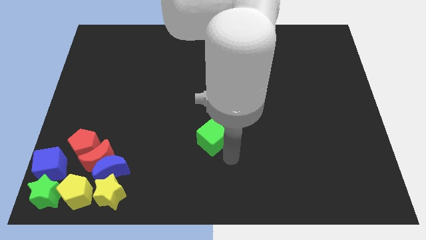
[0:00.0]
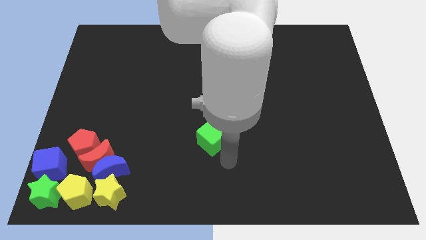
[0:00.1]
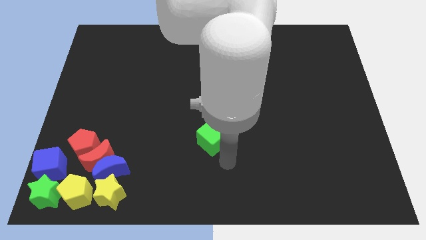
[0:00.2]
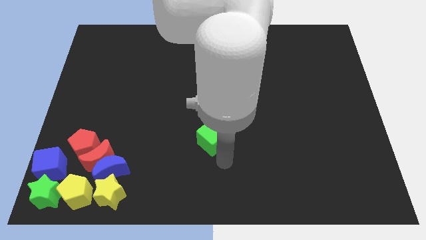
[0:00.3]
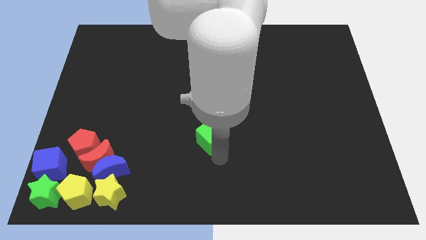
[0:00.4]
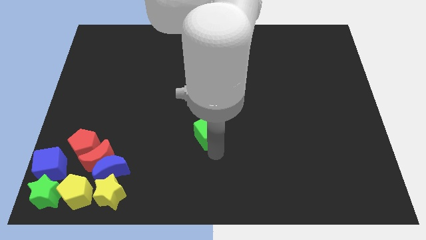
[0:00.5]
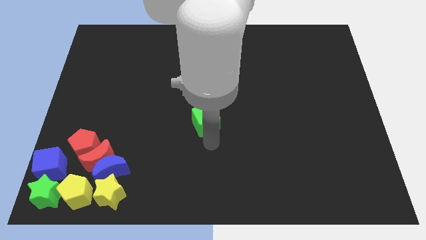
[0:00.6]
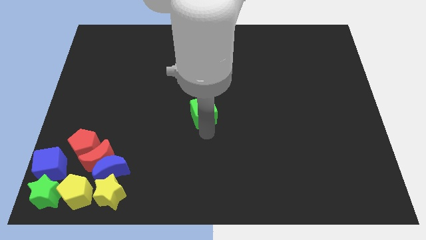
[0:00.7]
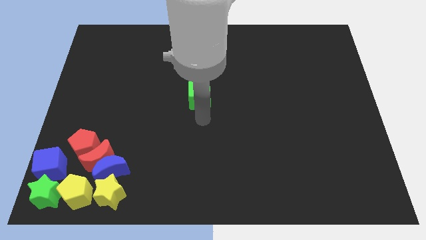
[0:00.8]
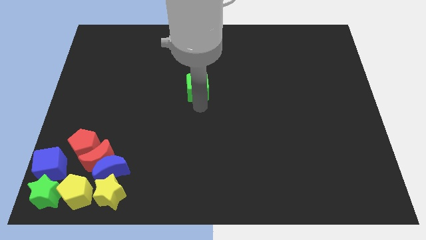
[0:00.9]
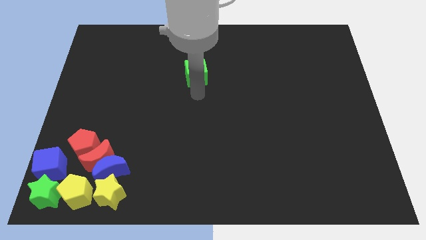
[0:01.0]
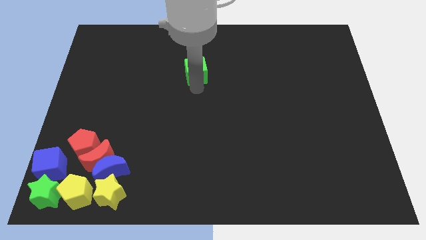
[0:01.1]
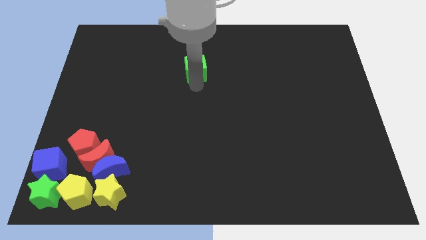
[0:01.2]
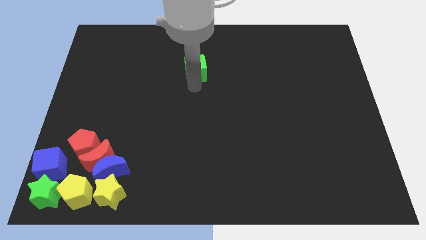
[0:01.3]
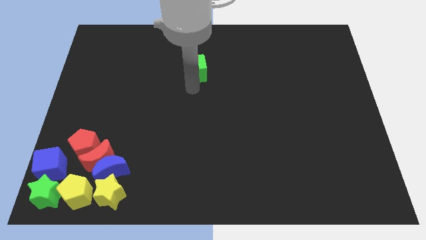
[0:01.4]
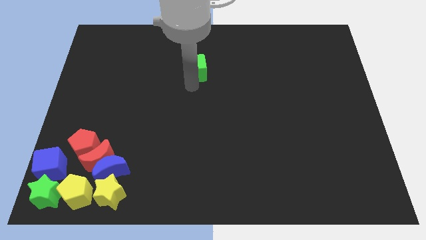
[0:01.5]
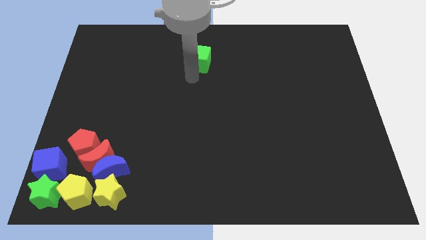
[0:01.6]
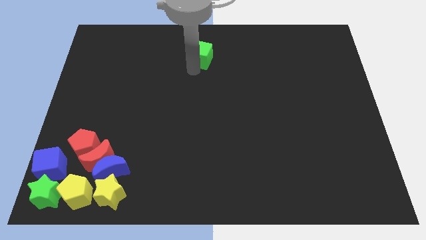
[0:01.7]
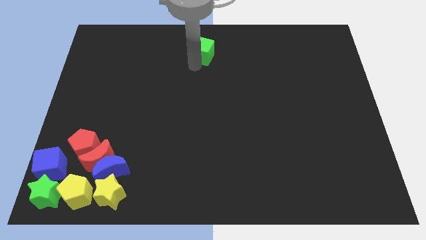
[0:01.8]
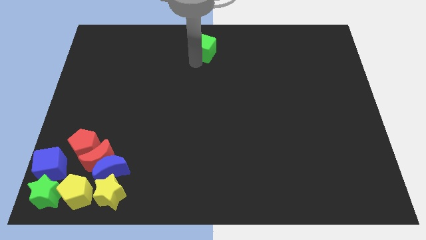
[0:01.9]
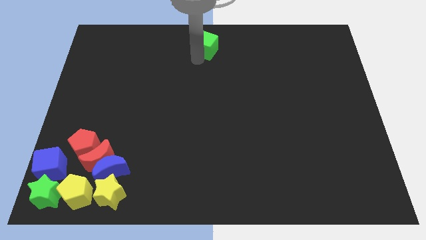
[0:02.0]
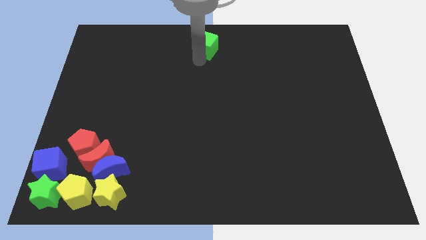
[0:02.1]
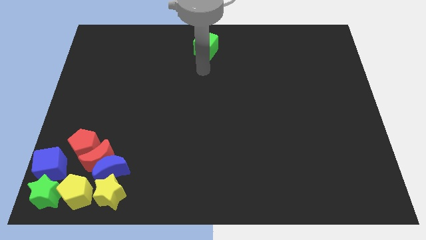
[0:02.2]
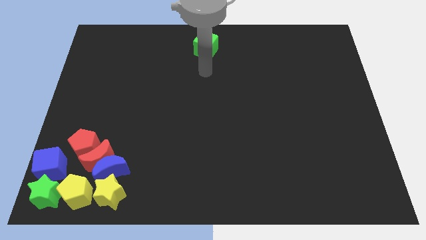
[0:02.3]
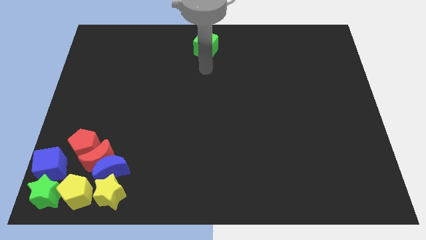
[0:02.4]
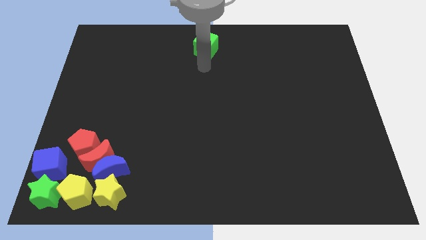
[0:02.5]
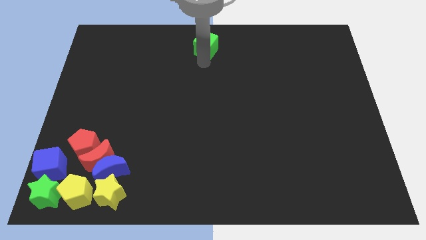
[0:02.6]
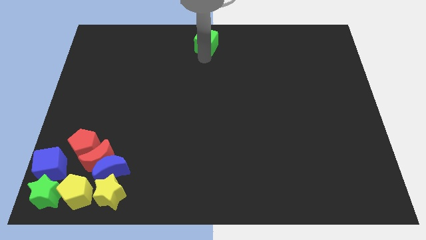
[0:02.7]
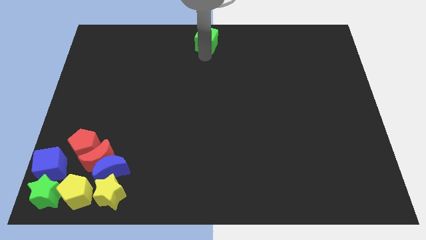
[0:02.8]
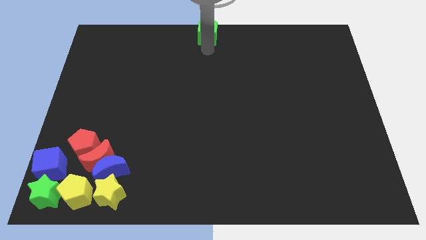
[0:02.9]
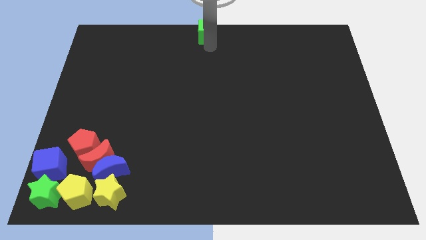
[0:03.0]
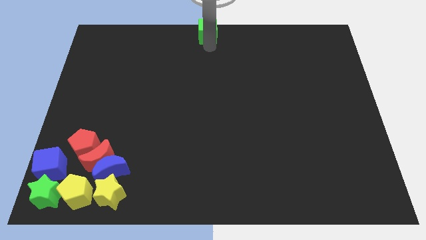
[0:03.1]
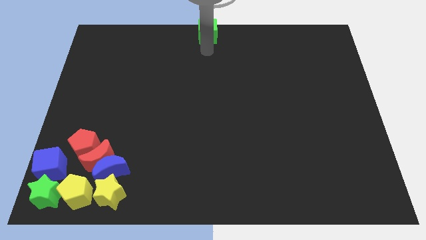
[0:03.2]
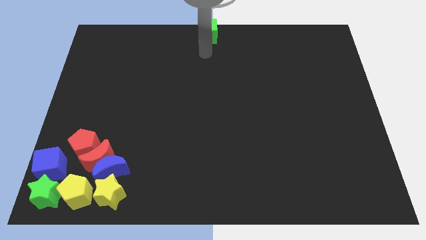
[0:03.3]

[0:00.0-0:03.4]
place the green cube towards the middle end of the board

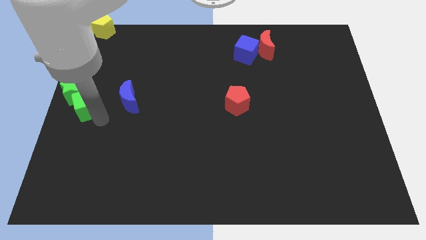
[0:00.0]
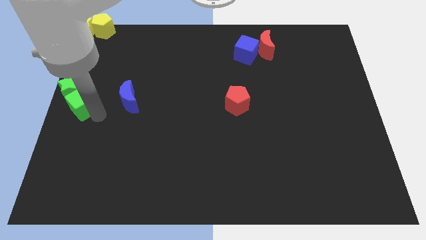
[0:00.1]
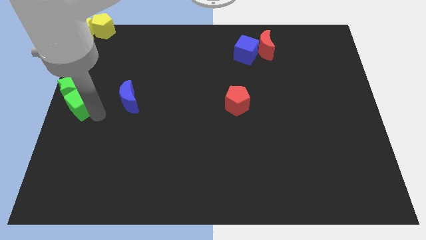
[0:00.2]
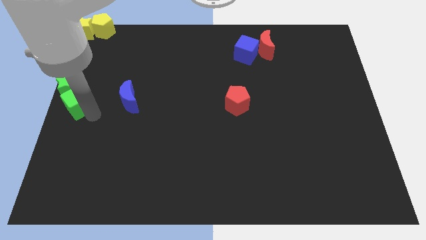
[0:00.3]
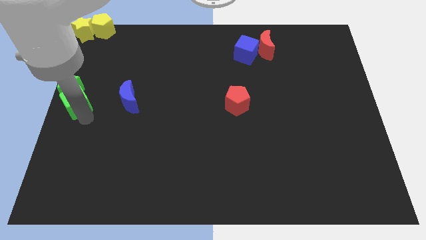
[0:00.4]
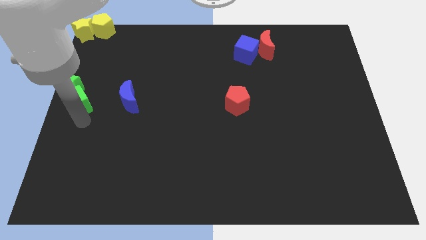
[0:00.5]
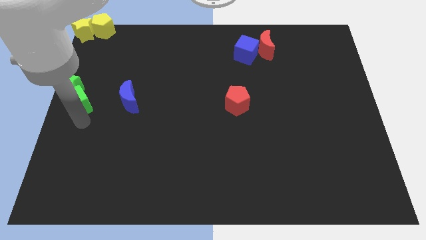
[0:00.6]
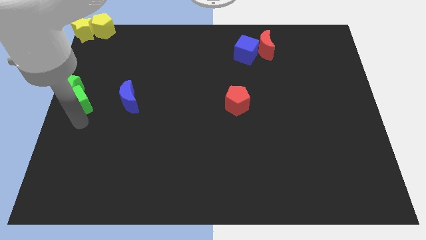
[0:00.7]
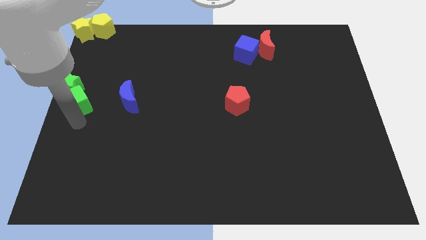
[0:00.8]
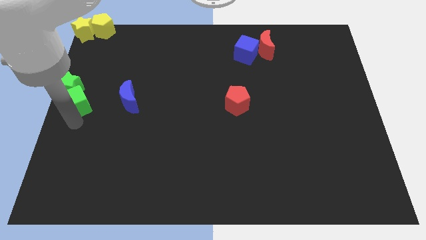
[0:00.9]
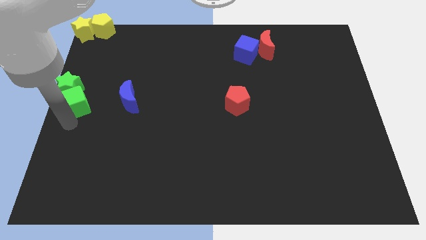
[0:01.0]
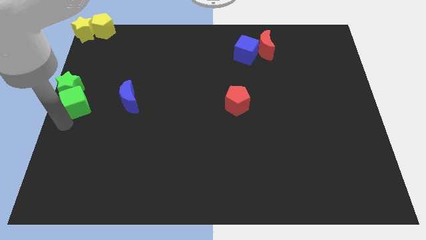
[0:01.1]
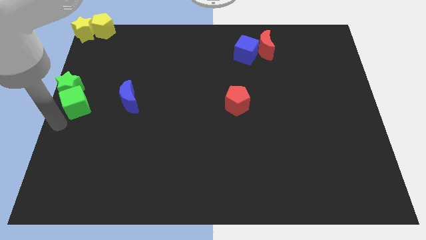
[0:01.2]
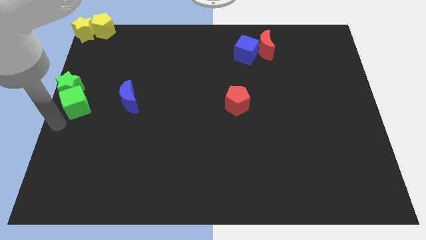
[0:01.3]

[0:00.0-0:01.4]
place the green blocks at the center left side of the board

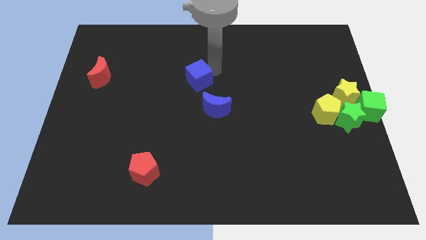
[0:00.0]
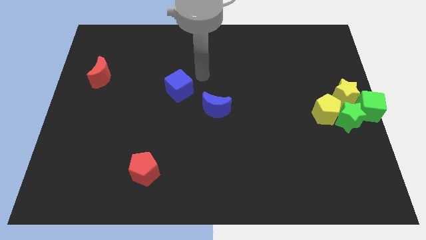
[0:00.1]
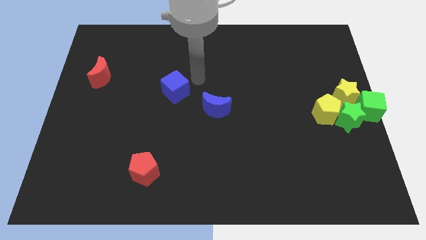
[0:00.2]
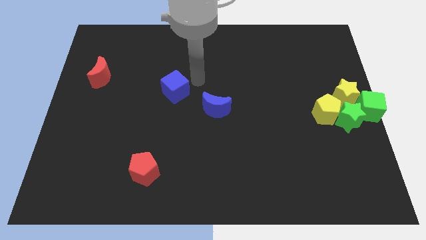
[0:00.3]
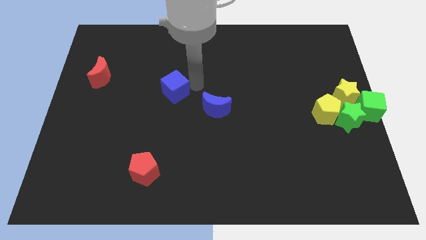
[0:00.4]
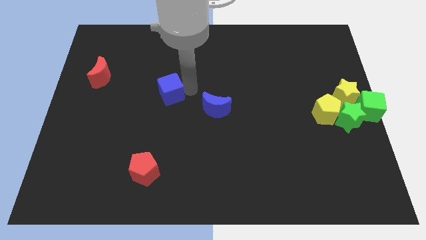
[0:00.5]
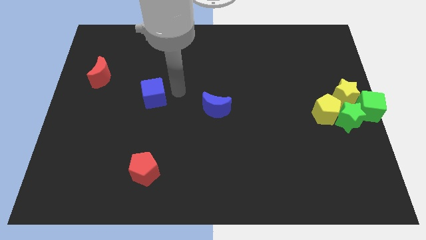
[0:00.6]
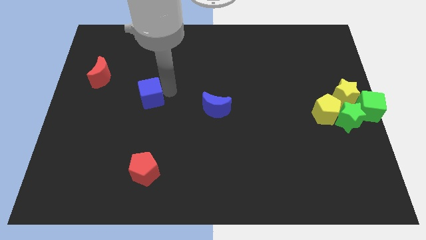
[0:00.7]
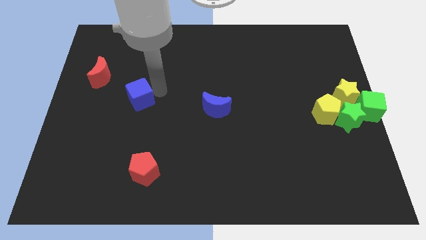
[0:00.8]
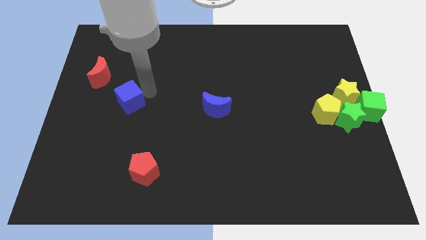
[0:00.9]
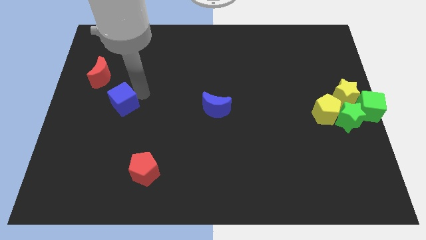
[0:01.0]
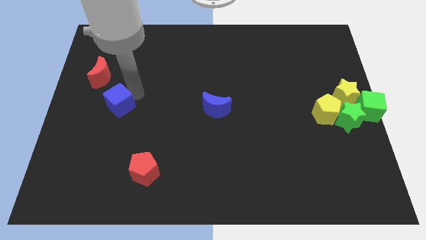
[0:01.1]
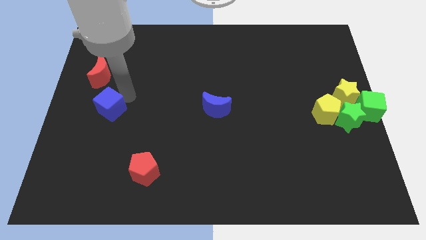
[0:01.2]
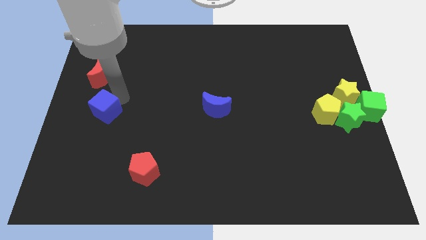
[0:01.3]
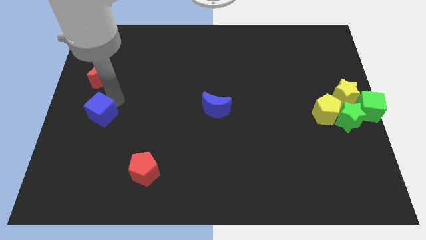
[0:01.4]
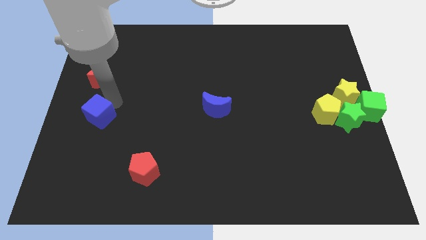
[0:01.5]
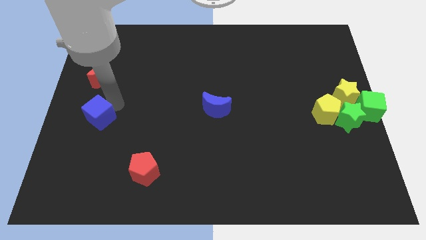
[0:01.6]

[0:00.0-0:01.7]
move the blue cube to the bottom side of the red moon

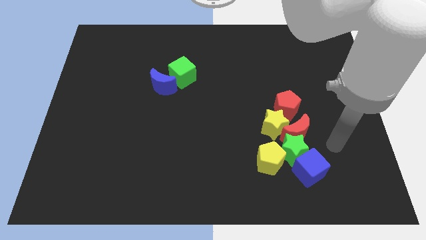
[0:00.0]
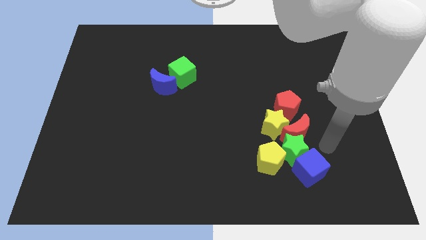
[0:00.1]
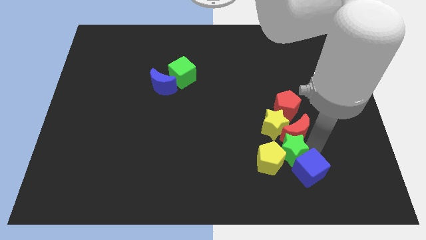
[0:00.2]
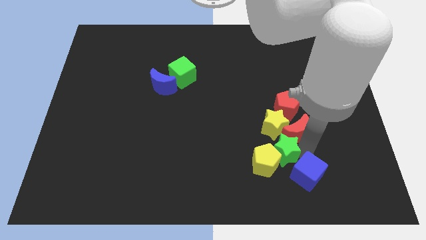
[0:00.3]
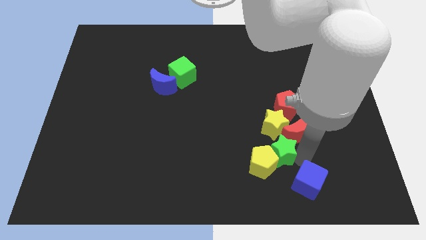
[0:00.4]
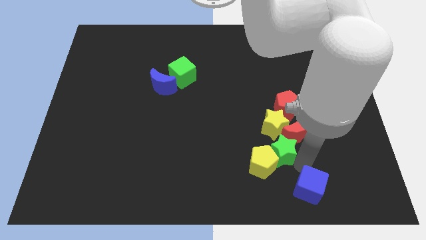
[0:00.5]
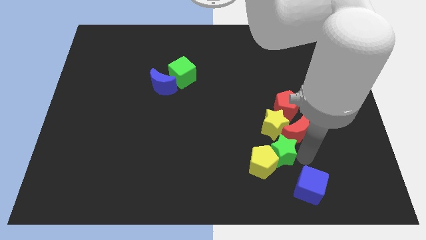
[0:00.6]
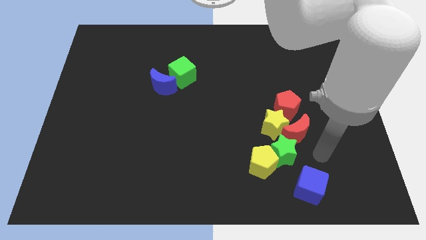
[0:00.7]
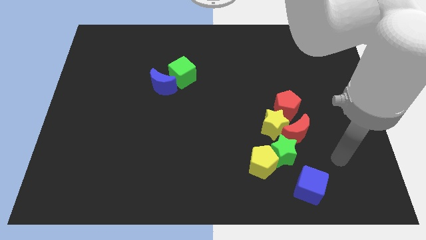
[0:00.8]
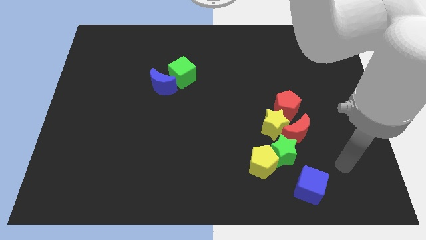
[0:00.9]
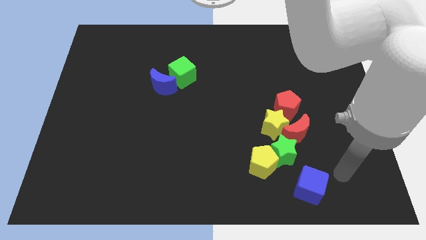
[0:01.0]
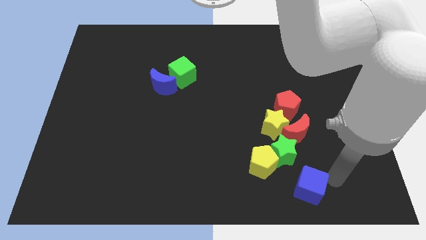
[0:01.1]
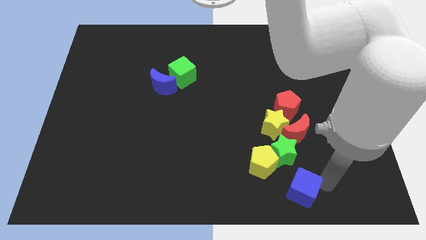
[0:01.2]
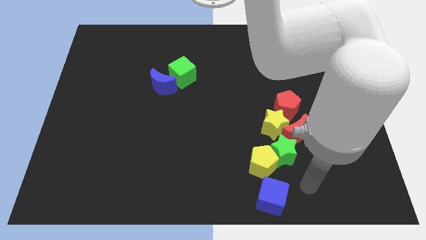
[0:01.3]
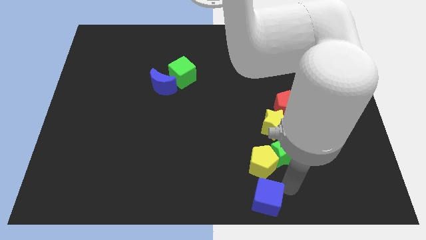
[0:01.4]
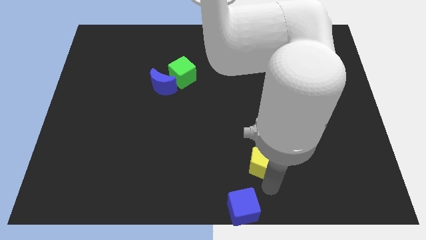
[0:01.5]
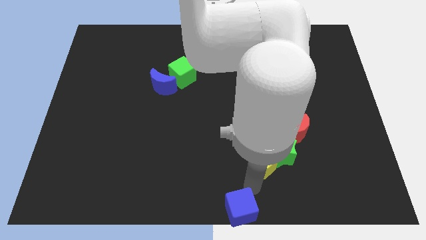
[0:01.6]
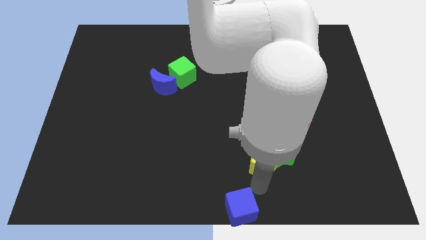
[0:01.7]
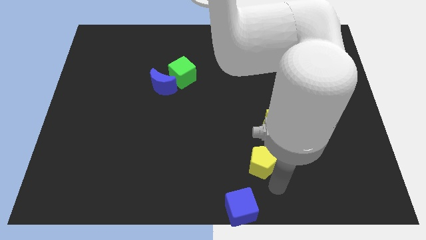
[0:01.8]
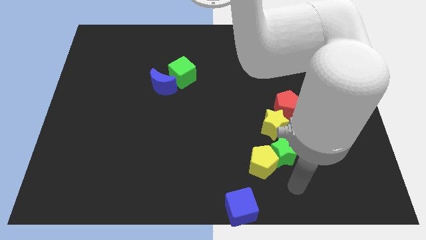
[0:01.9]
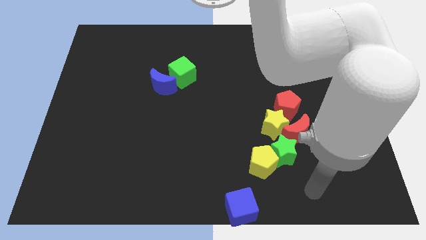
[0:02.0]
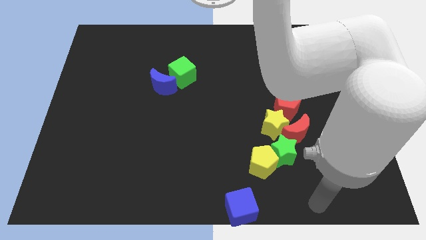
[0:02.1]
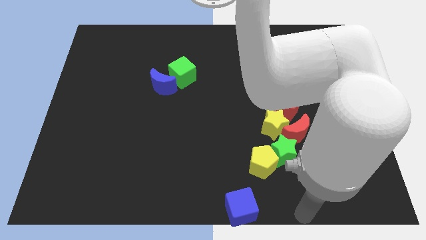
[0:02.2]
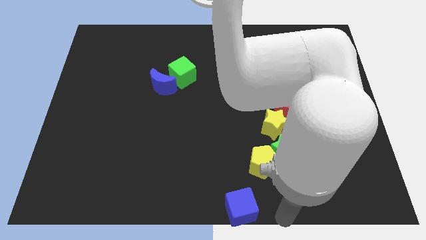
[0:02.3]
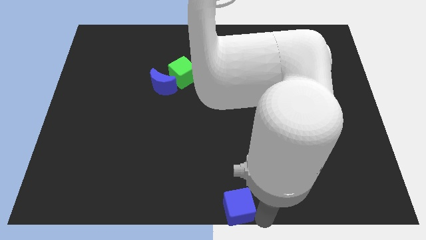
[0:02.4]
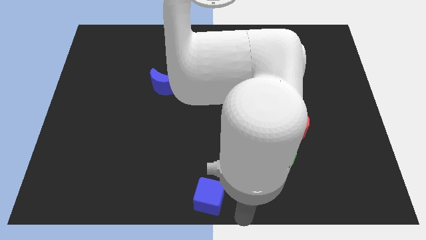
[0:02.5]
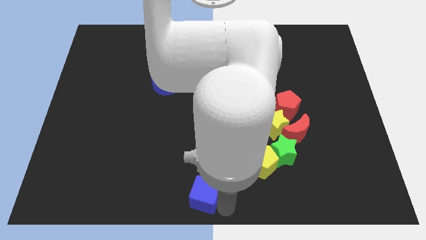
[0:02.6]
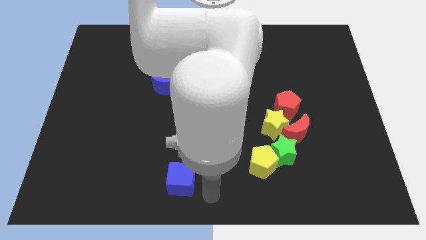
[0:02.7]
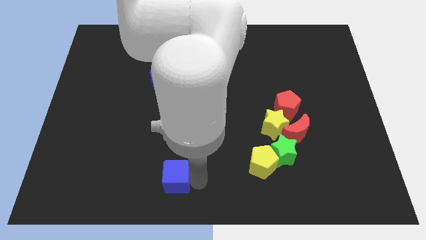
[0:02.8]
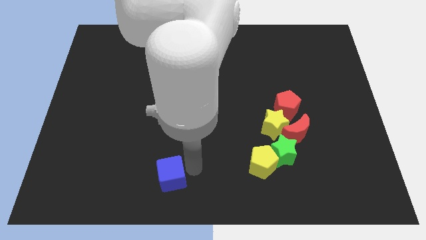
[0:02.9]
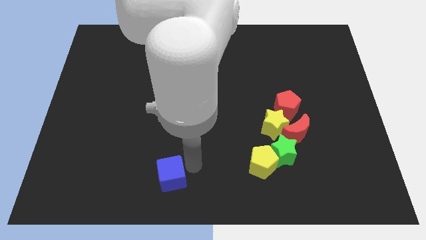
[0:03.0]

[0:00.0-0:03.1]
separate blue cube from green star
